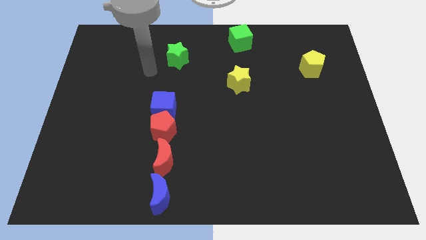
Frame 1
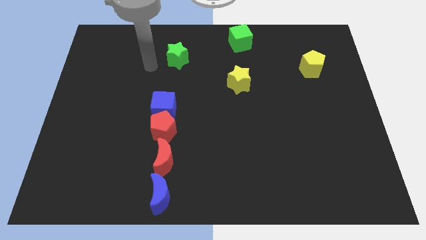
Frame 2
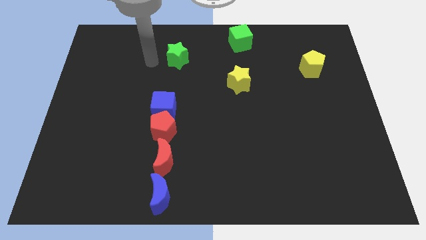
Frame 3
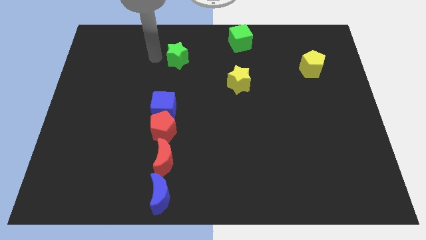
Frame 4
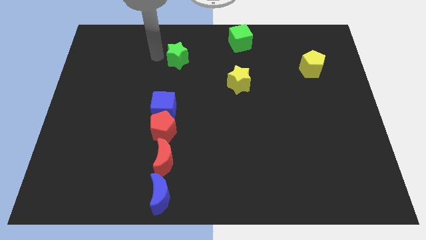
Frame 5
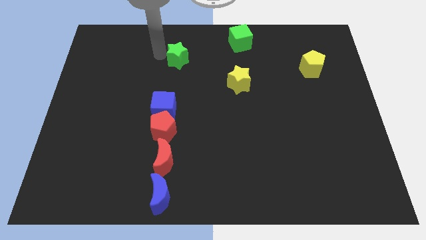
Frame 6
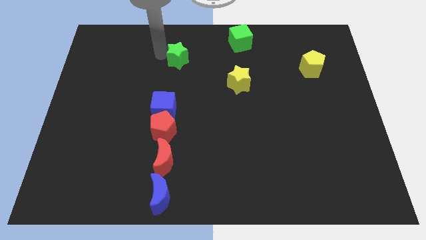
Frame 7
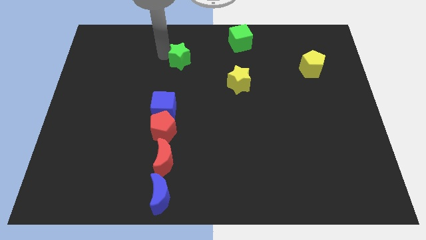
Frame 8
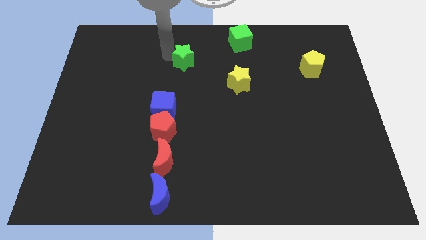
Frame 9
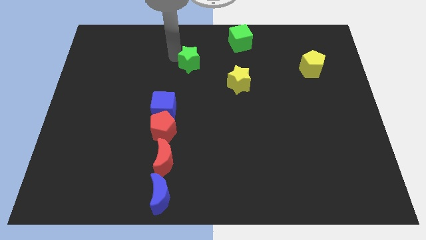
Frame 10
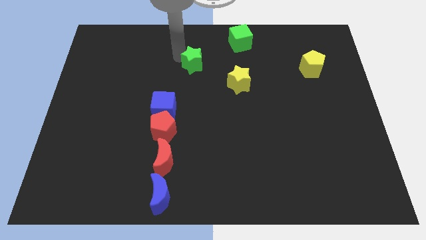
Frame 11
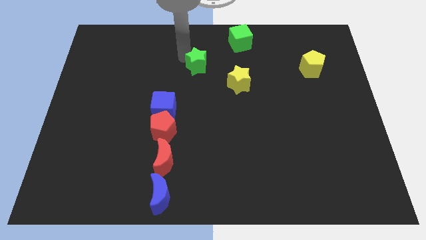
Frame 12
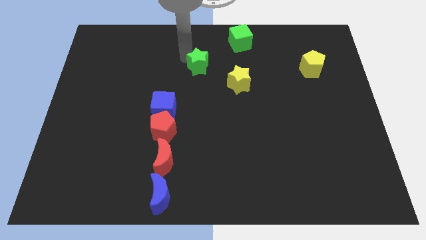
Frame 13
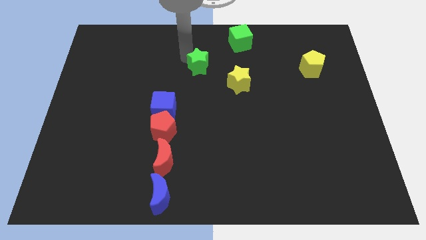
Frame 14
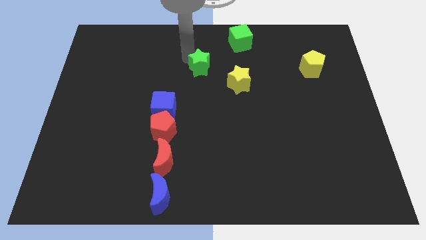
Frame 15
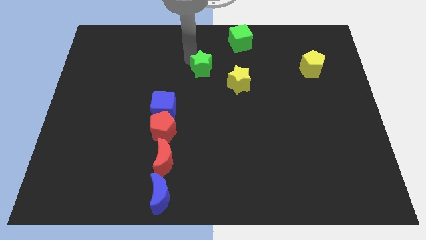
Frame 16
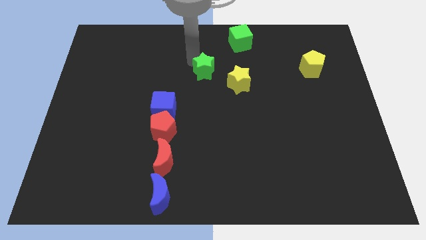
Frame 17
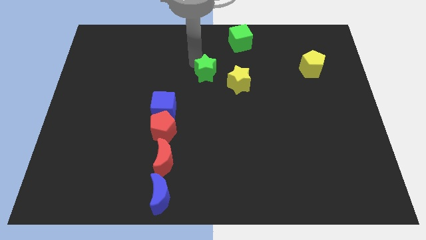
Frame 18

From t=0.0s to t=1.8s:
push green star towards yellow star

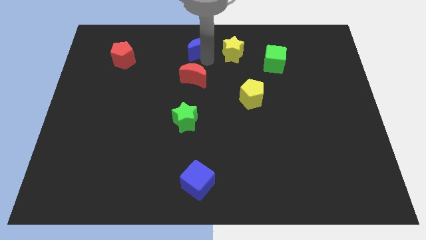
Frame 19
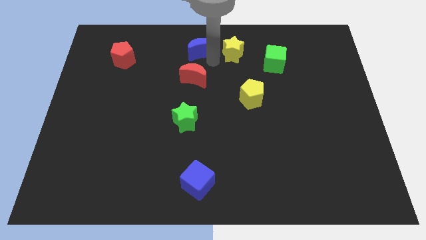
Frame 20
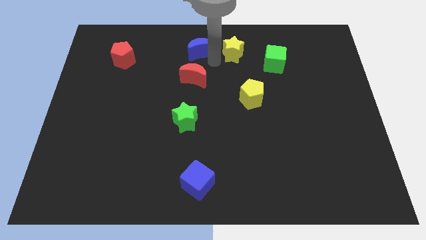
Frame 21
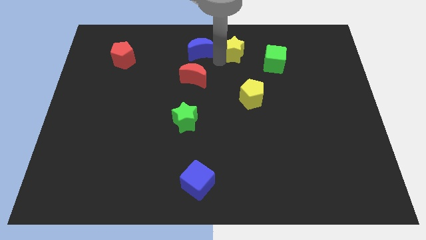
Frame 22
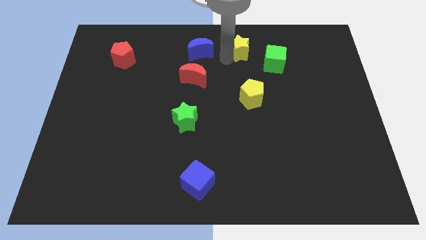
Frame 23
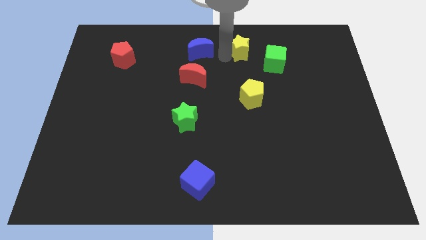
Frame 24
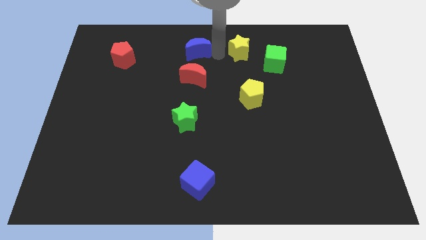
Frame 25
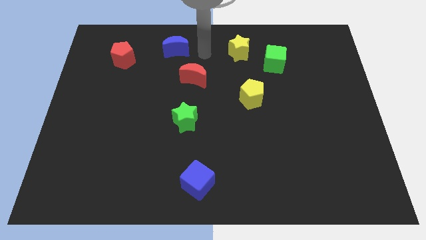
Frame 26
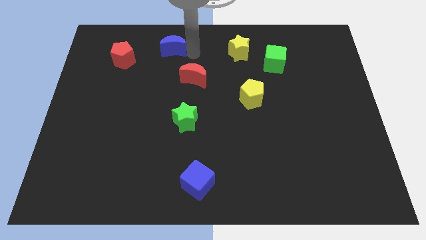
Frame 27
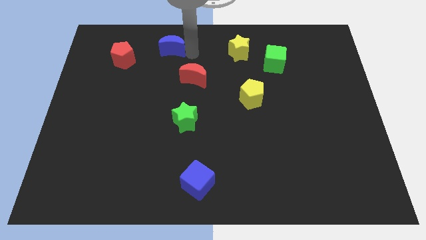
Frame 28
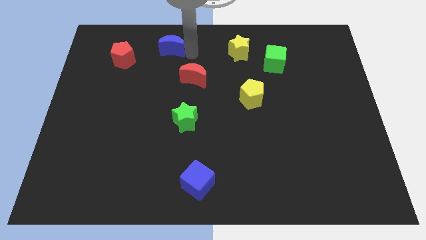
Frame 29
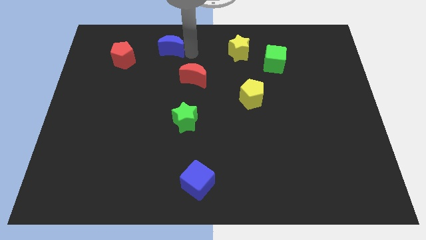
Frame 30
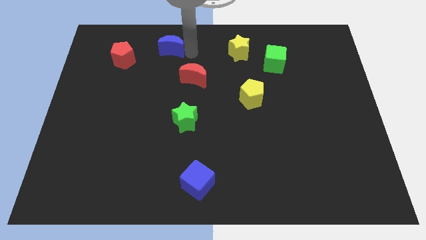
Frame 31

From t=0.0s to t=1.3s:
separate the yellow star and blue crescent

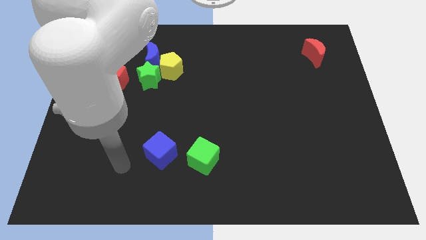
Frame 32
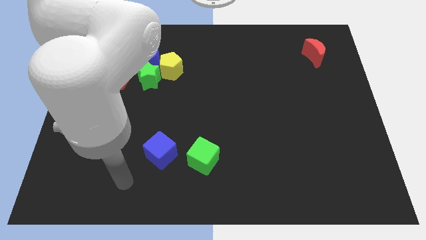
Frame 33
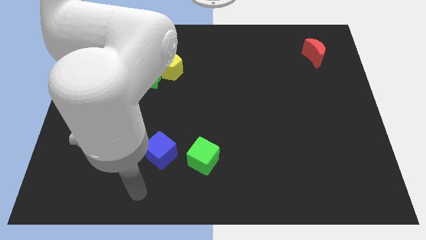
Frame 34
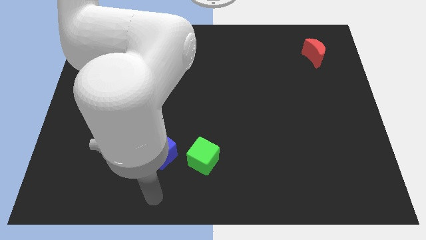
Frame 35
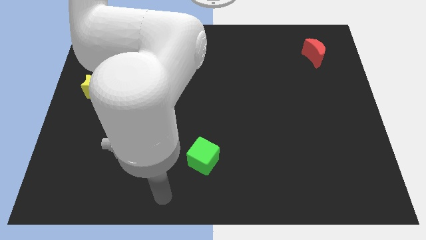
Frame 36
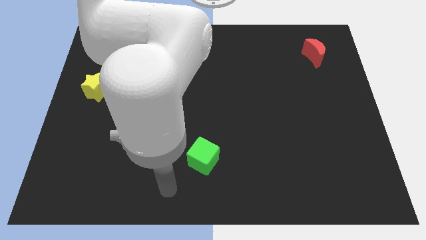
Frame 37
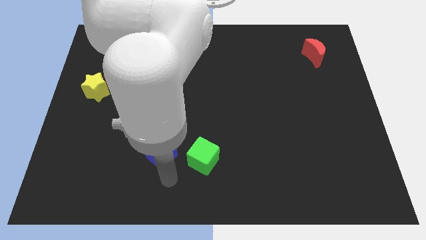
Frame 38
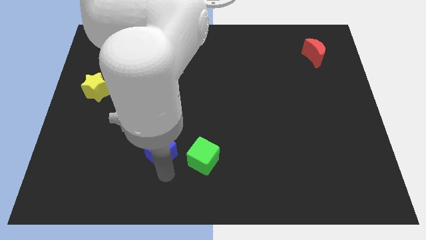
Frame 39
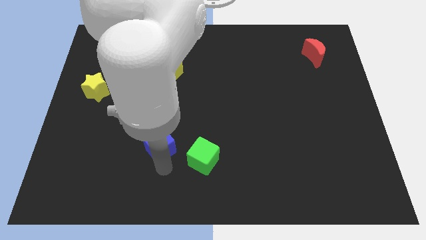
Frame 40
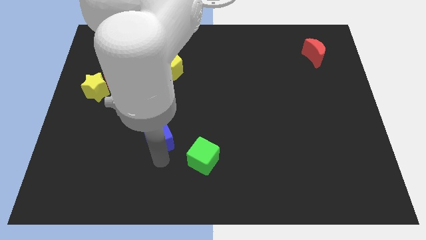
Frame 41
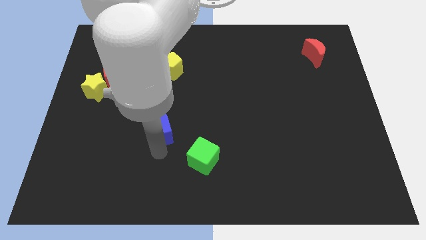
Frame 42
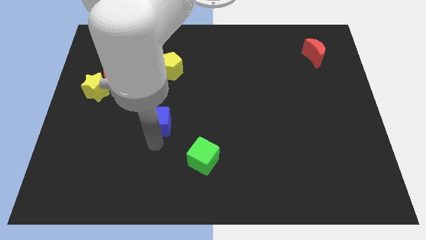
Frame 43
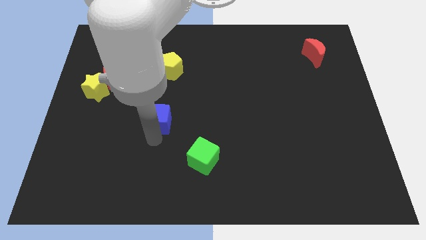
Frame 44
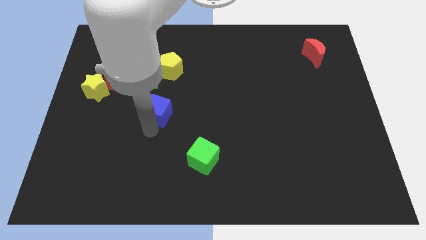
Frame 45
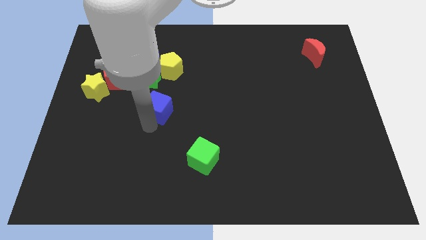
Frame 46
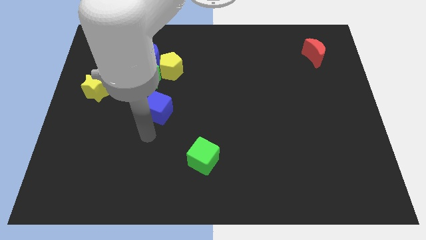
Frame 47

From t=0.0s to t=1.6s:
drag the blue cube towards the green star

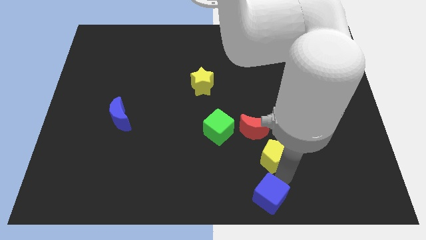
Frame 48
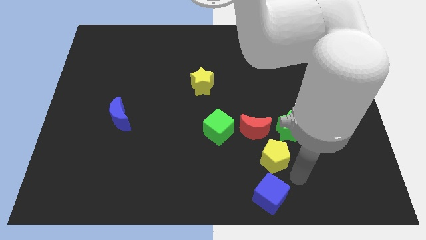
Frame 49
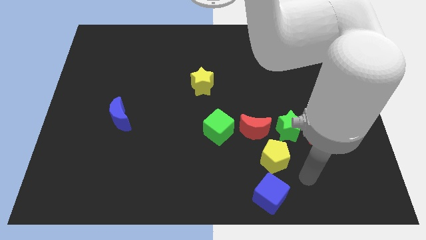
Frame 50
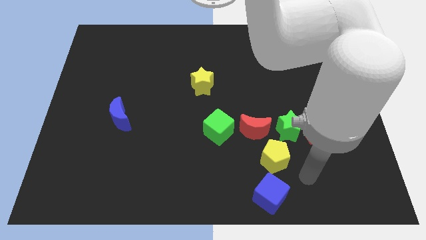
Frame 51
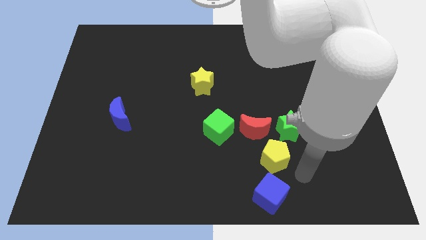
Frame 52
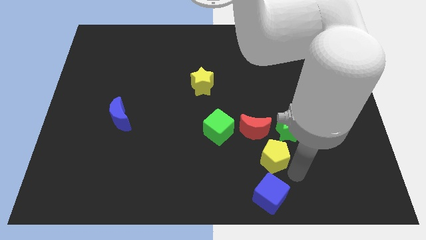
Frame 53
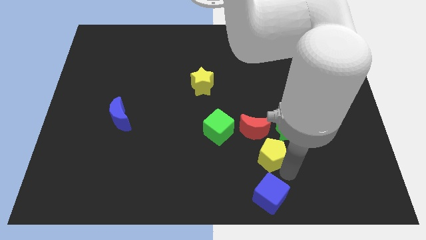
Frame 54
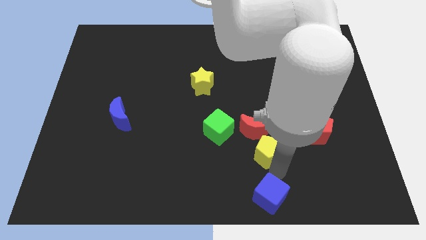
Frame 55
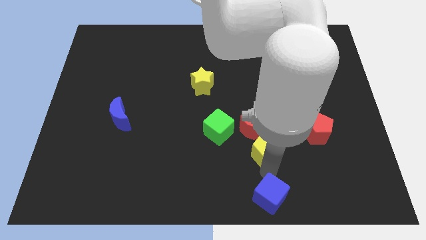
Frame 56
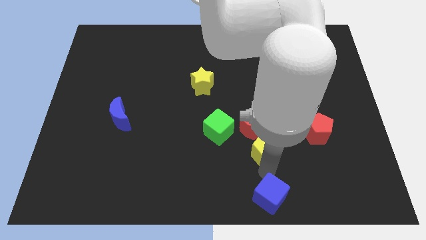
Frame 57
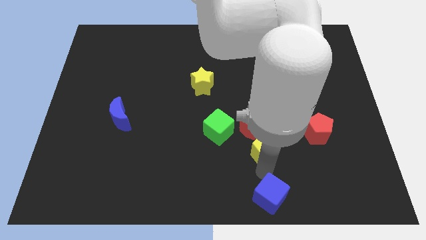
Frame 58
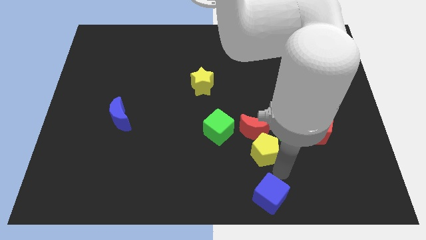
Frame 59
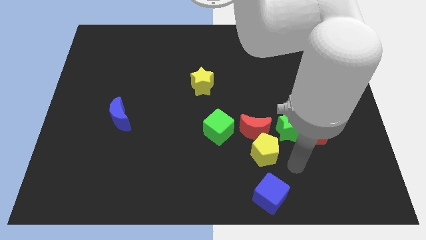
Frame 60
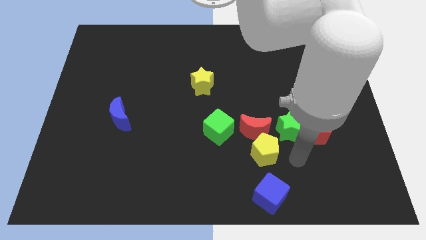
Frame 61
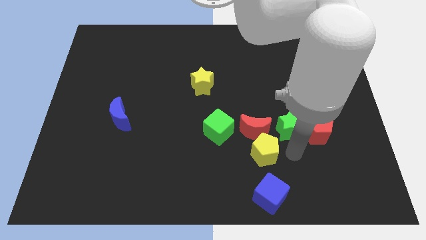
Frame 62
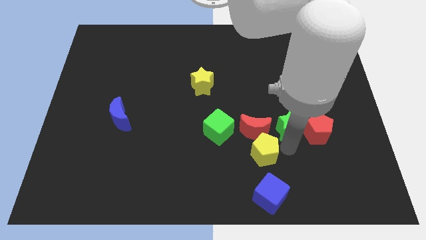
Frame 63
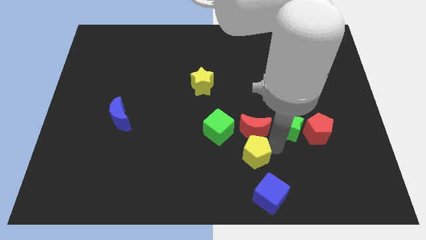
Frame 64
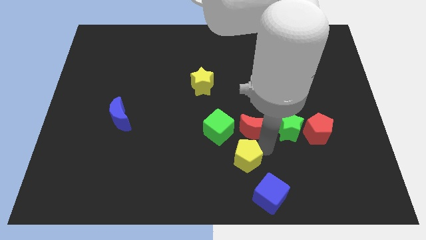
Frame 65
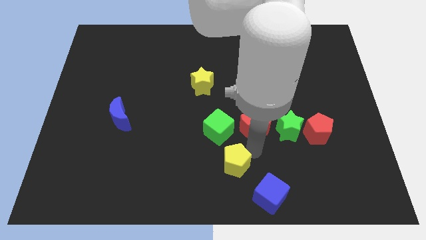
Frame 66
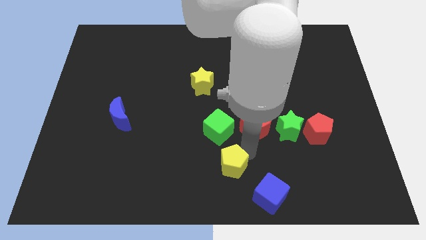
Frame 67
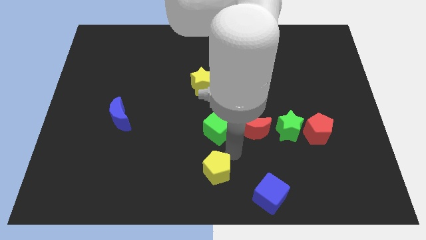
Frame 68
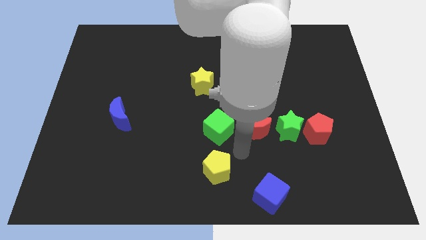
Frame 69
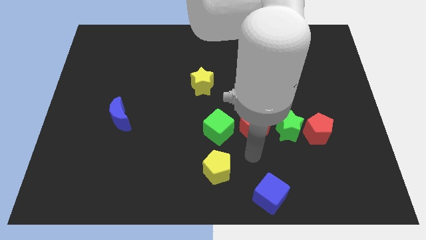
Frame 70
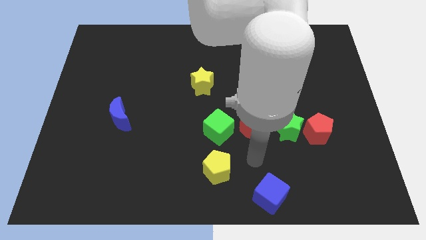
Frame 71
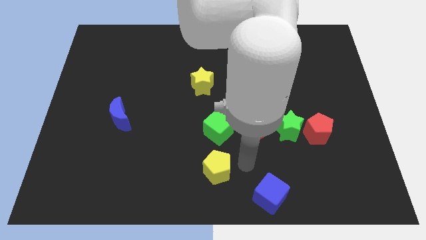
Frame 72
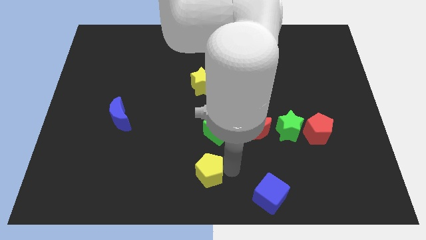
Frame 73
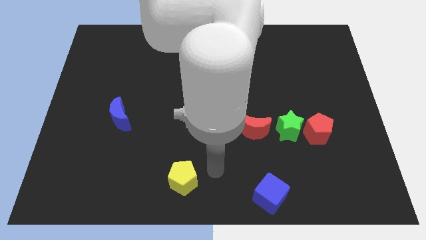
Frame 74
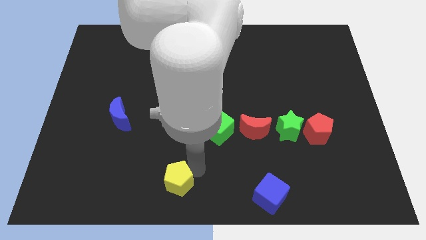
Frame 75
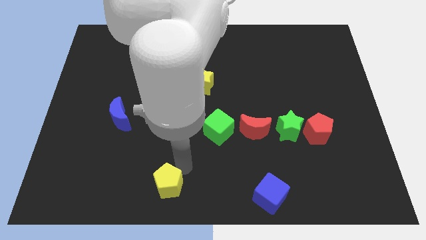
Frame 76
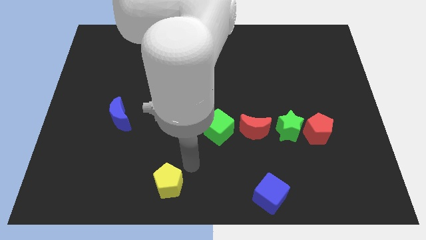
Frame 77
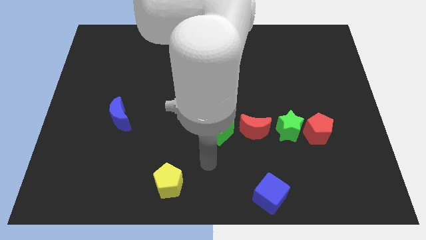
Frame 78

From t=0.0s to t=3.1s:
separate yellow pentagon from blue cube

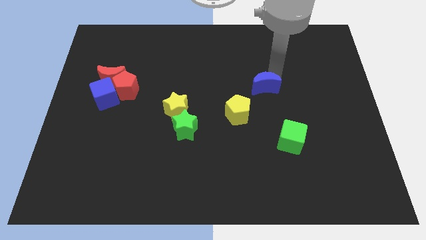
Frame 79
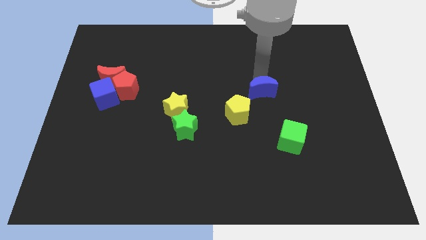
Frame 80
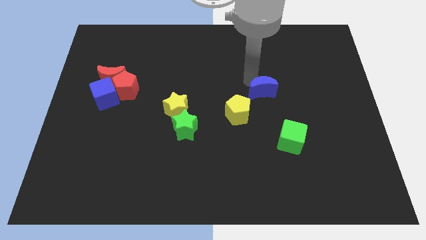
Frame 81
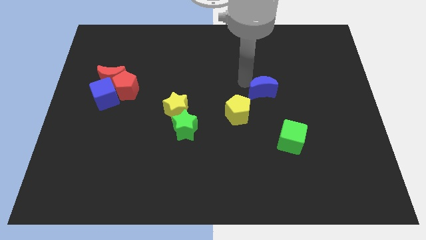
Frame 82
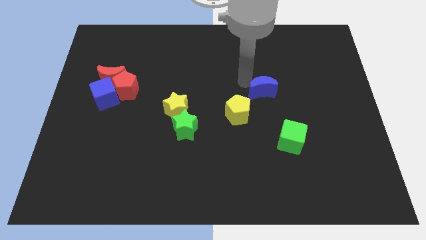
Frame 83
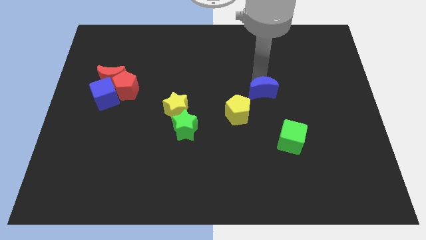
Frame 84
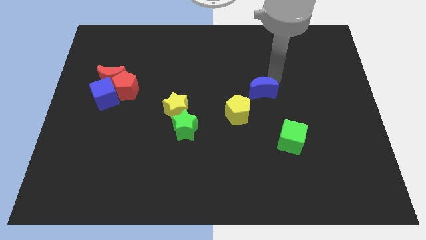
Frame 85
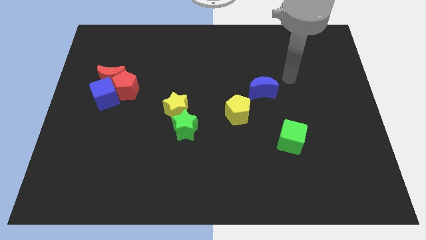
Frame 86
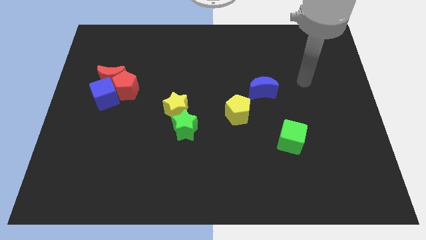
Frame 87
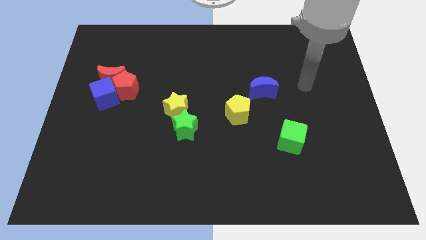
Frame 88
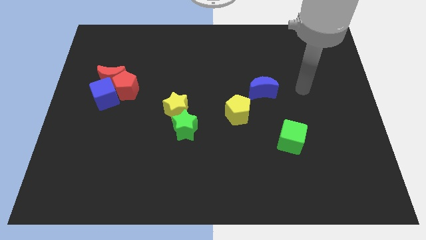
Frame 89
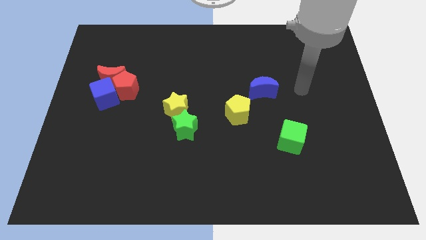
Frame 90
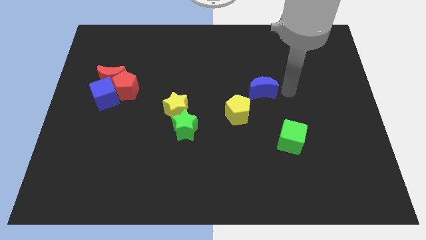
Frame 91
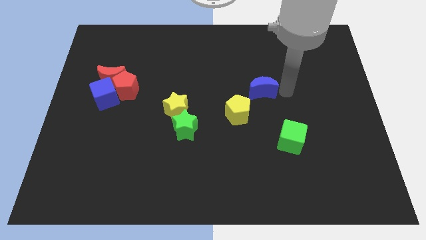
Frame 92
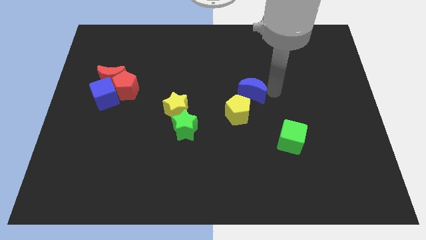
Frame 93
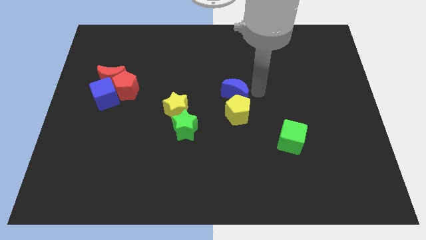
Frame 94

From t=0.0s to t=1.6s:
place the blue crescent above the yellow pentagon
